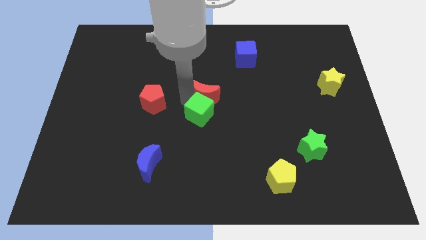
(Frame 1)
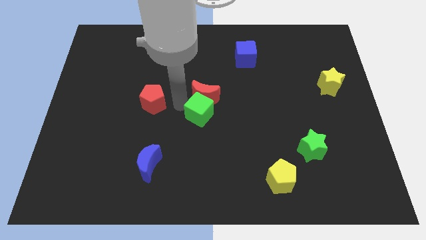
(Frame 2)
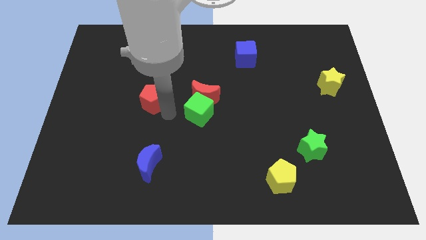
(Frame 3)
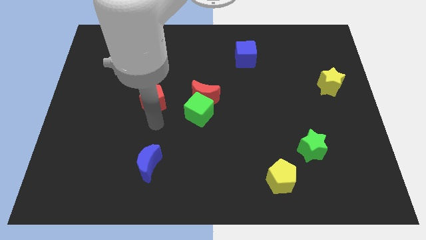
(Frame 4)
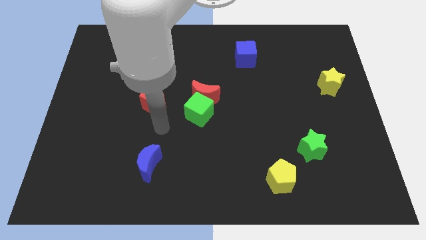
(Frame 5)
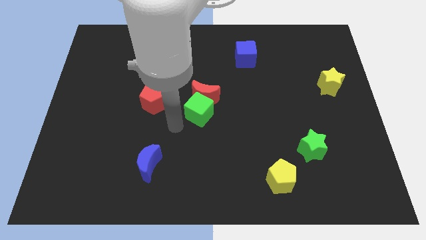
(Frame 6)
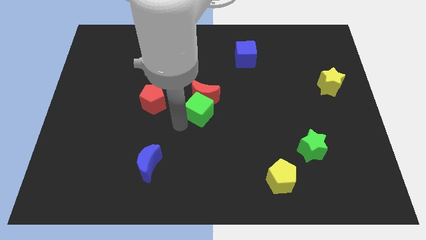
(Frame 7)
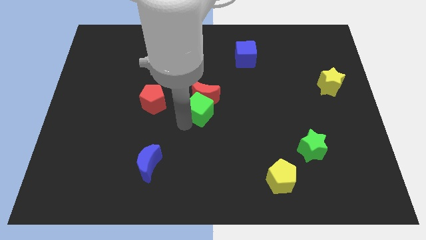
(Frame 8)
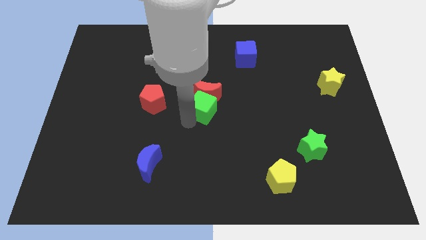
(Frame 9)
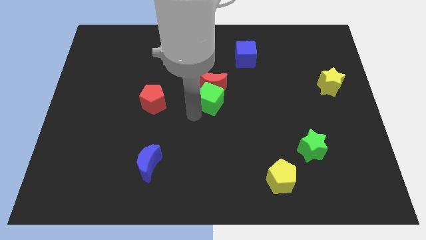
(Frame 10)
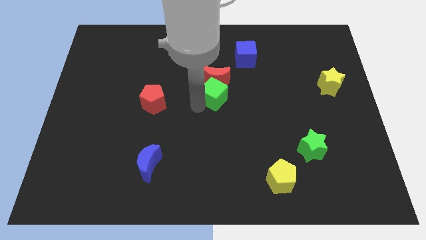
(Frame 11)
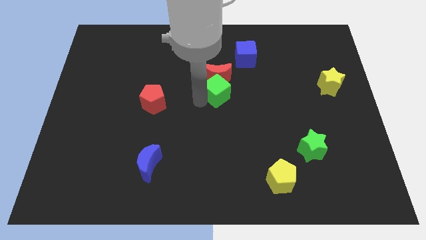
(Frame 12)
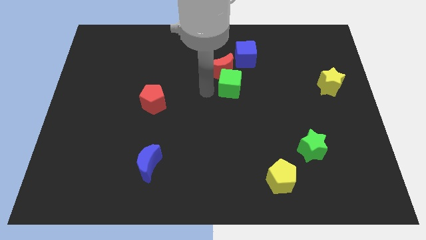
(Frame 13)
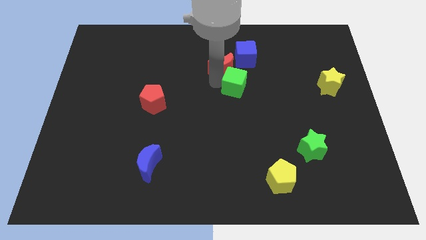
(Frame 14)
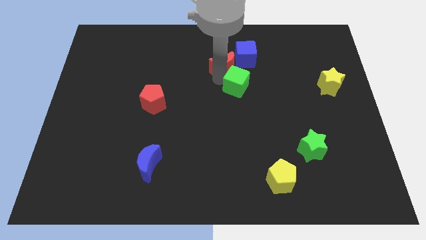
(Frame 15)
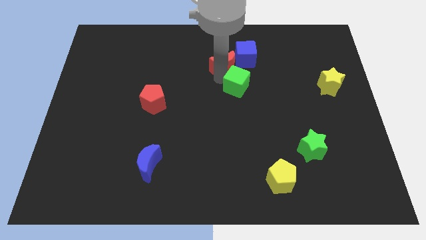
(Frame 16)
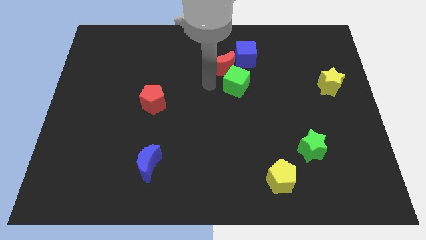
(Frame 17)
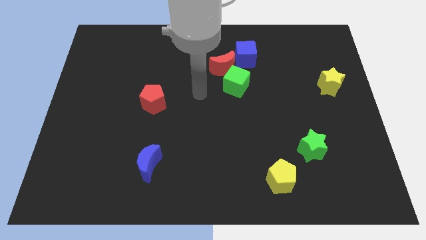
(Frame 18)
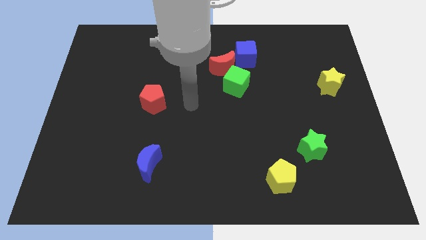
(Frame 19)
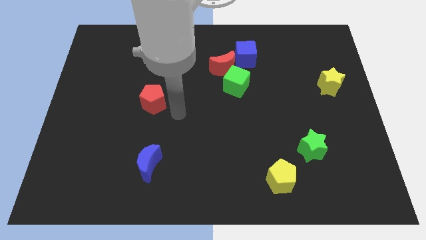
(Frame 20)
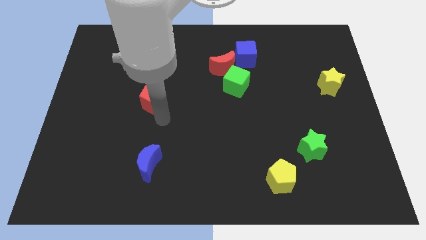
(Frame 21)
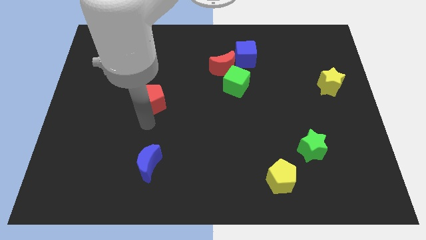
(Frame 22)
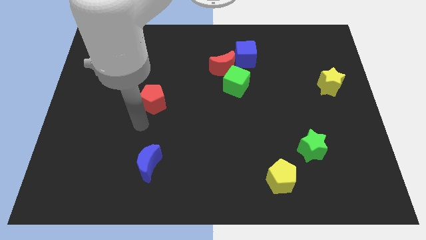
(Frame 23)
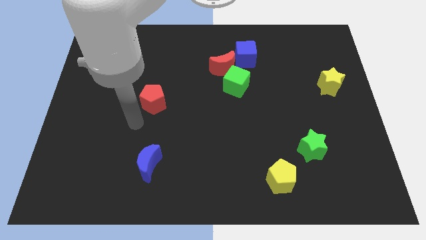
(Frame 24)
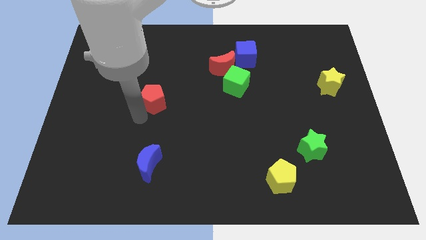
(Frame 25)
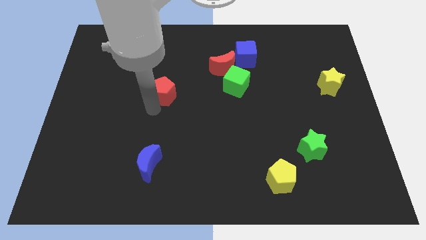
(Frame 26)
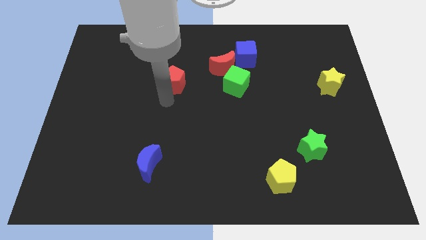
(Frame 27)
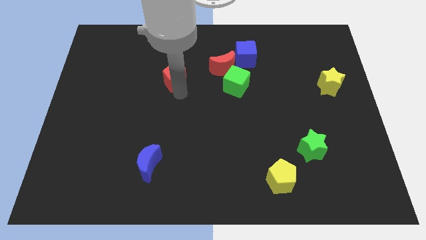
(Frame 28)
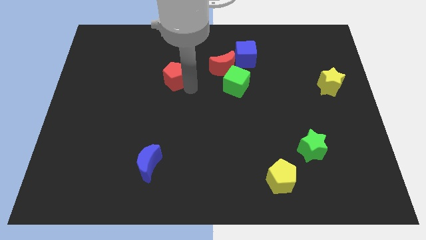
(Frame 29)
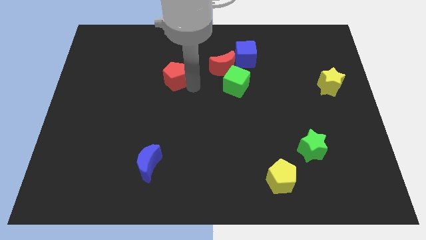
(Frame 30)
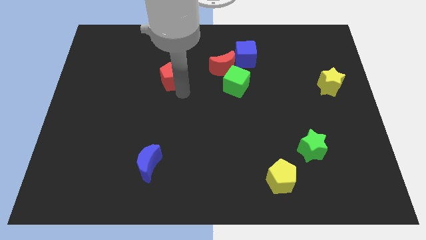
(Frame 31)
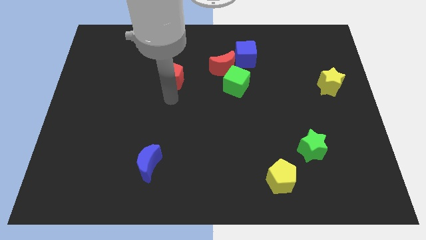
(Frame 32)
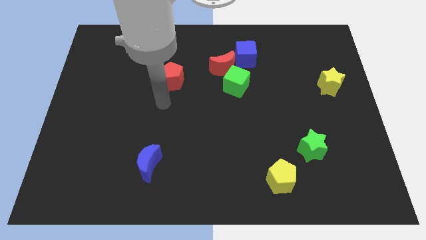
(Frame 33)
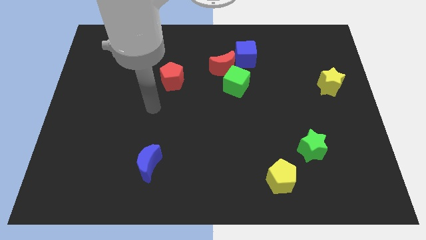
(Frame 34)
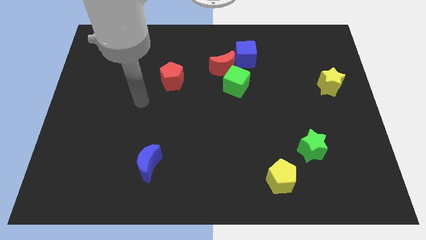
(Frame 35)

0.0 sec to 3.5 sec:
push green cube and red pentagon to the blue cube

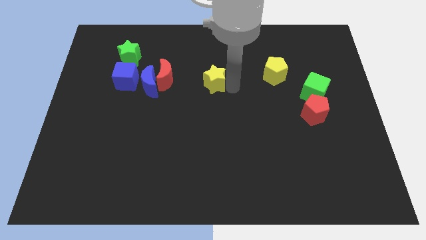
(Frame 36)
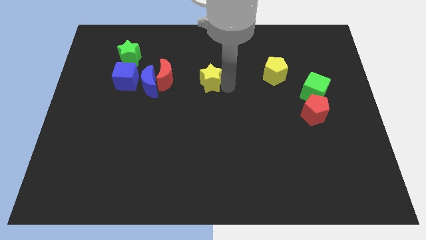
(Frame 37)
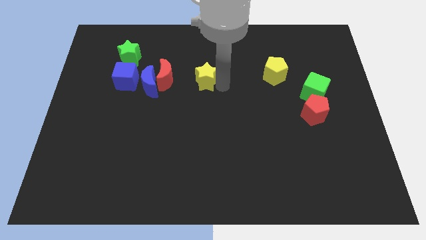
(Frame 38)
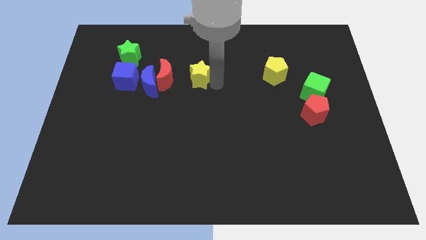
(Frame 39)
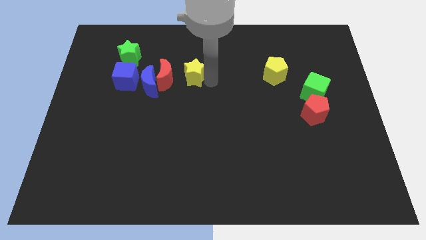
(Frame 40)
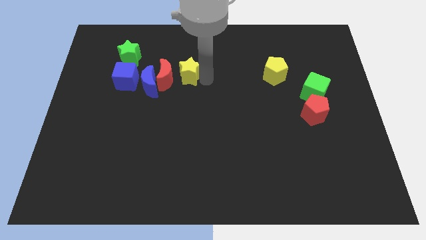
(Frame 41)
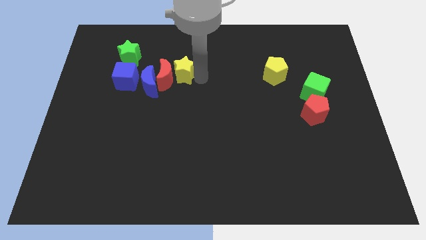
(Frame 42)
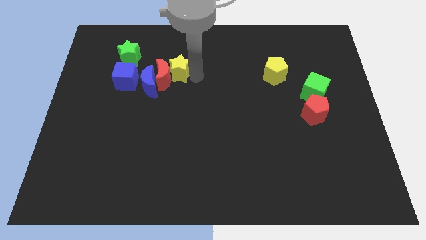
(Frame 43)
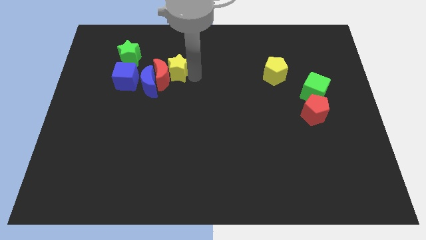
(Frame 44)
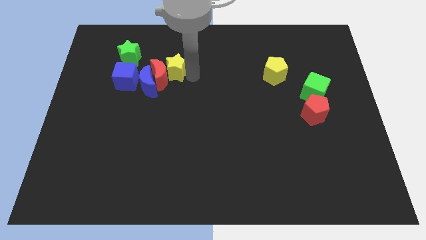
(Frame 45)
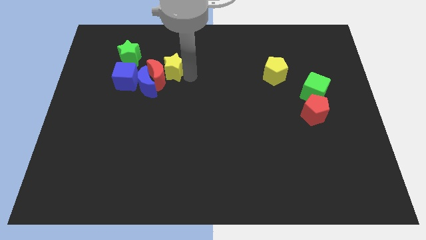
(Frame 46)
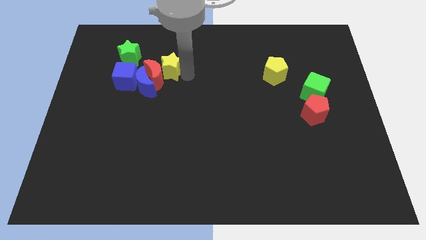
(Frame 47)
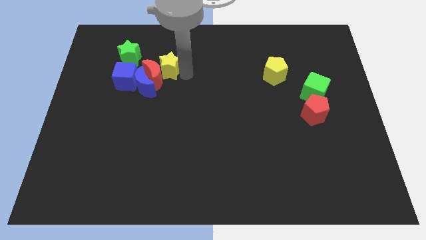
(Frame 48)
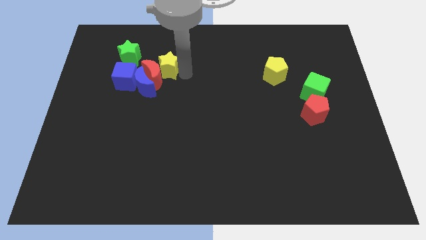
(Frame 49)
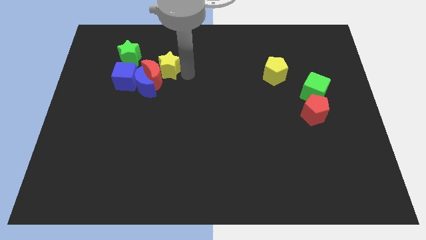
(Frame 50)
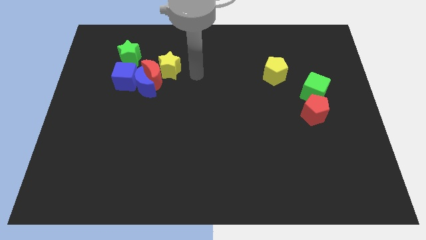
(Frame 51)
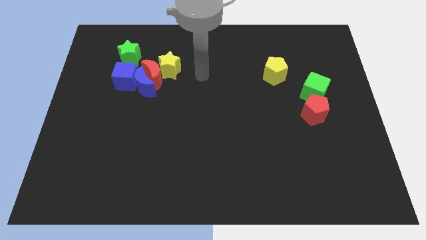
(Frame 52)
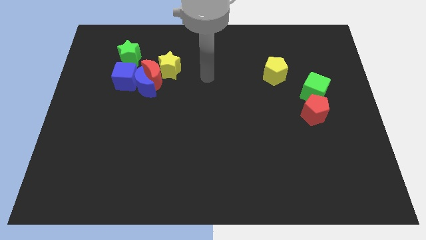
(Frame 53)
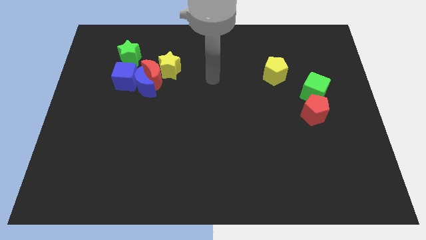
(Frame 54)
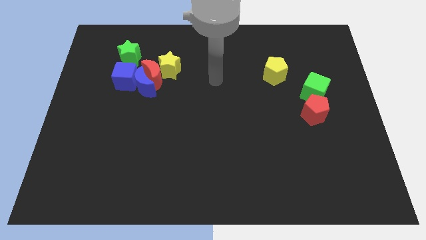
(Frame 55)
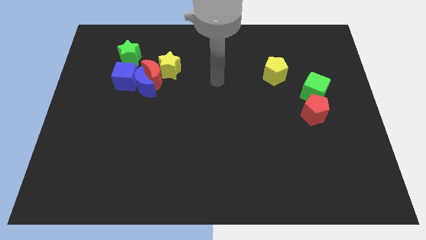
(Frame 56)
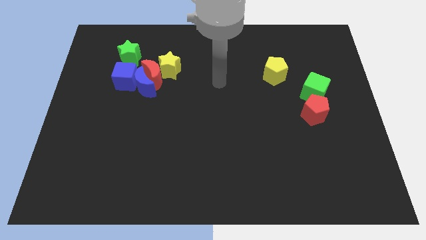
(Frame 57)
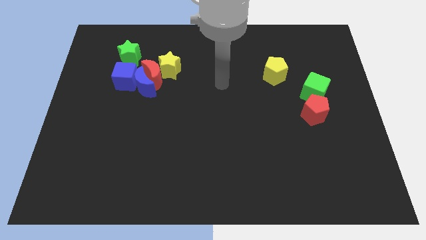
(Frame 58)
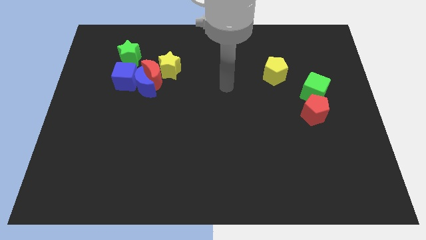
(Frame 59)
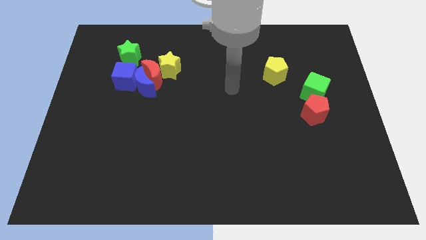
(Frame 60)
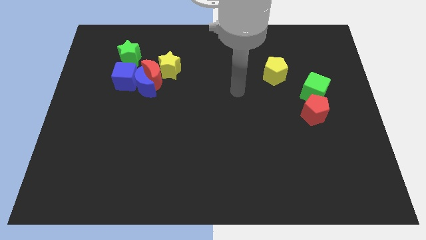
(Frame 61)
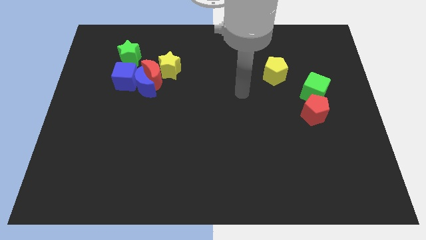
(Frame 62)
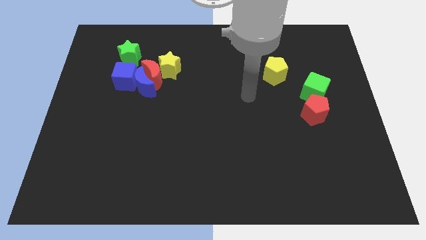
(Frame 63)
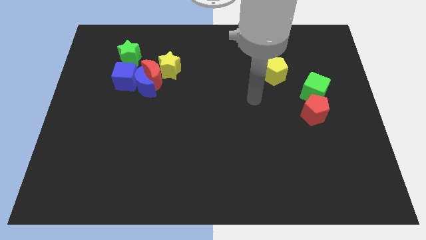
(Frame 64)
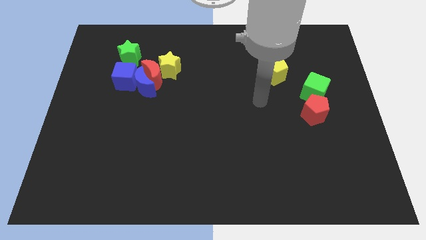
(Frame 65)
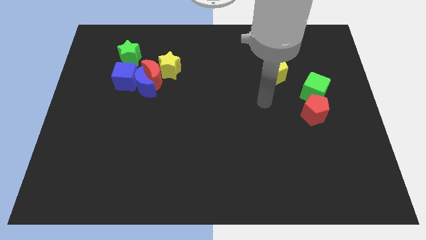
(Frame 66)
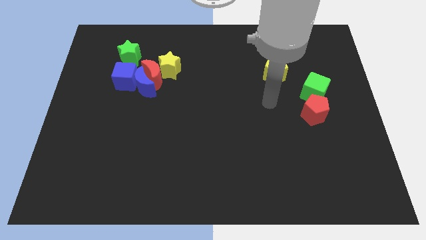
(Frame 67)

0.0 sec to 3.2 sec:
move yellow star into red crescent

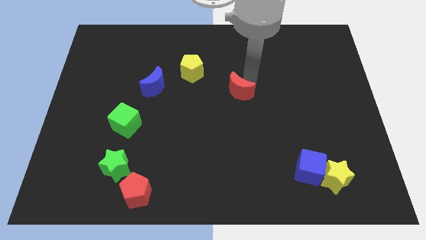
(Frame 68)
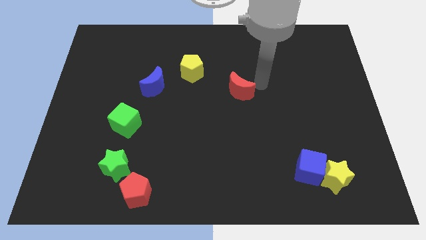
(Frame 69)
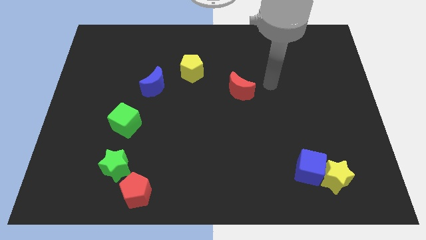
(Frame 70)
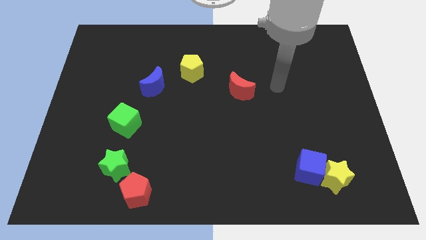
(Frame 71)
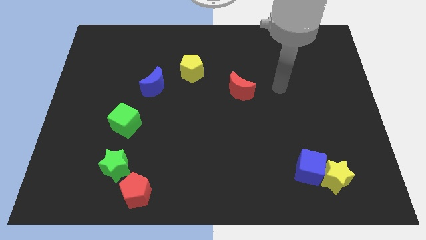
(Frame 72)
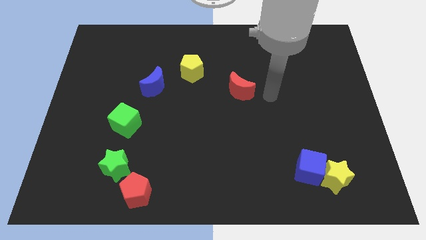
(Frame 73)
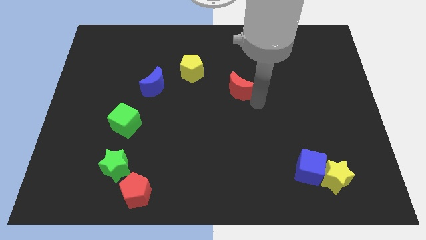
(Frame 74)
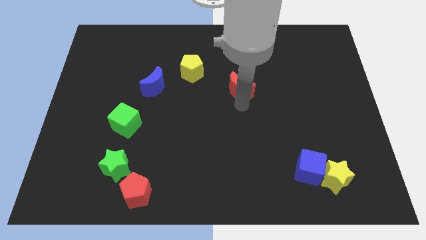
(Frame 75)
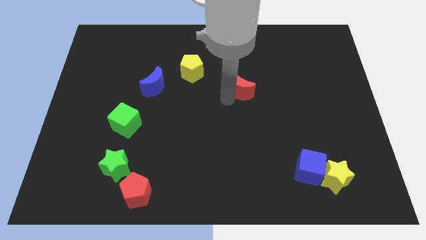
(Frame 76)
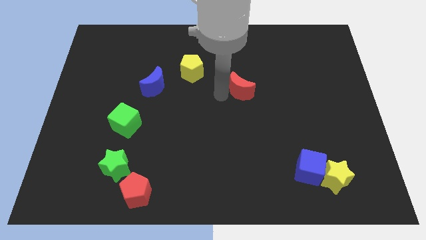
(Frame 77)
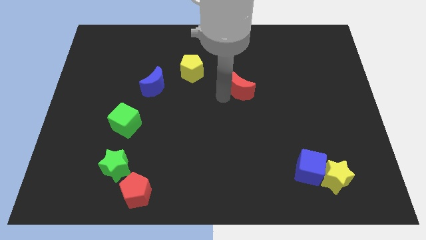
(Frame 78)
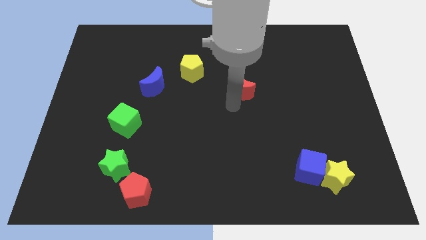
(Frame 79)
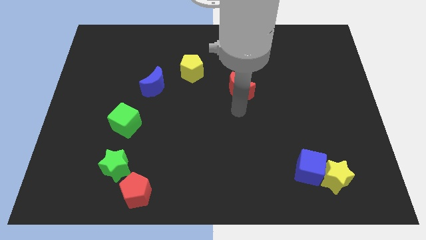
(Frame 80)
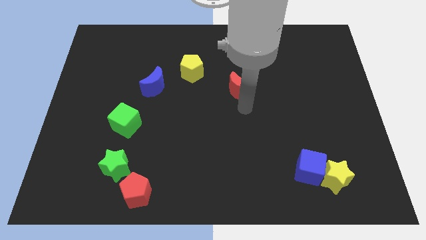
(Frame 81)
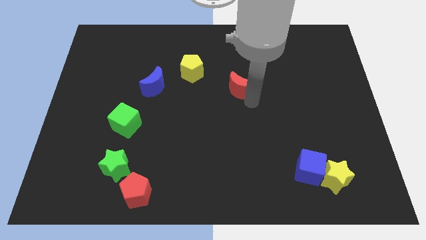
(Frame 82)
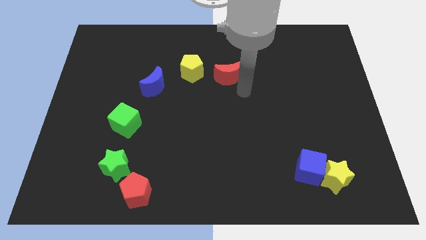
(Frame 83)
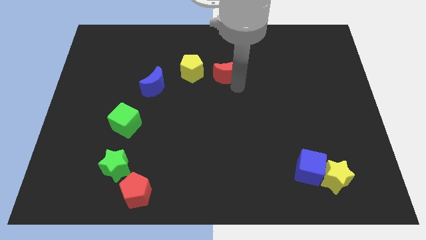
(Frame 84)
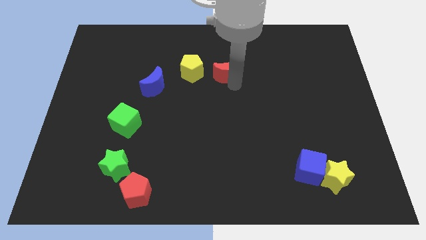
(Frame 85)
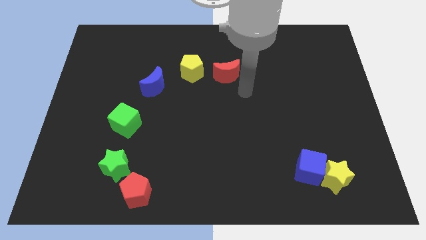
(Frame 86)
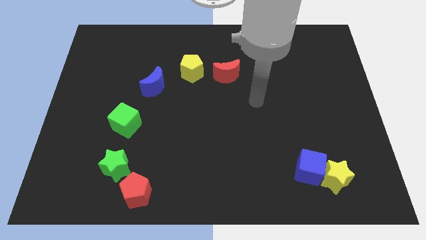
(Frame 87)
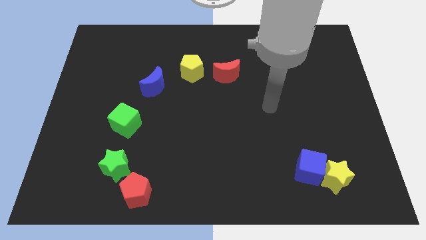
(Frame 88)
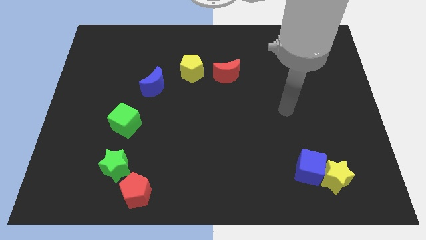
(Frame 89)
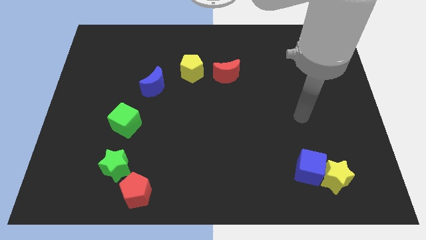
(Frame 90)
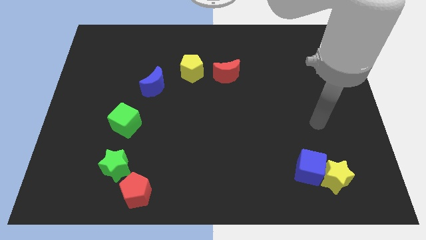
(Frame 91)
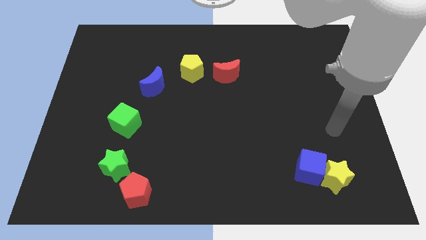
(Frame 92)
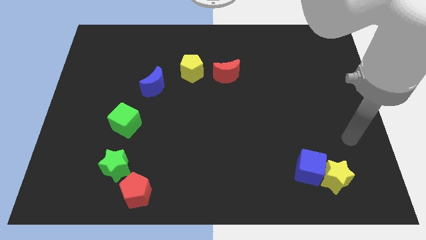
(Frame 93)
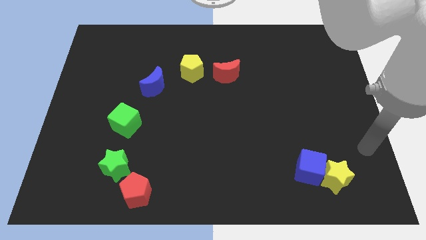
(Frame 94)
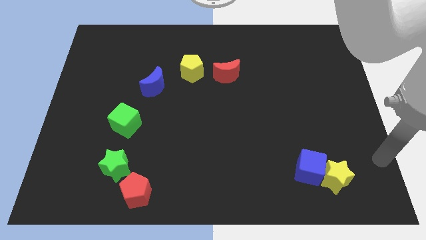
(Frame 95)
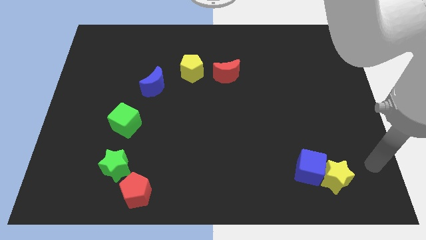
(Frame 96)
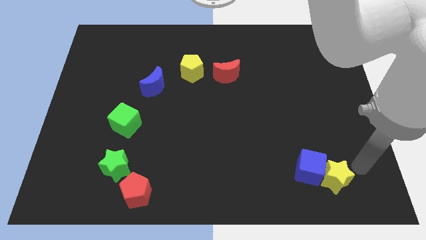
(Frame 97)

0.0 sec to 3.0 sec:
put the red moon at the right side of the yellow pentagon
